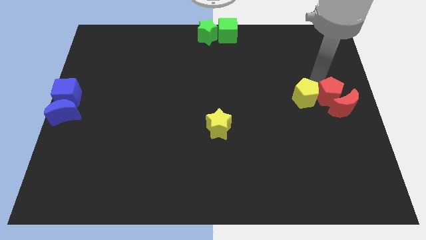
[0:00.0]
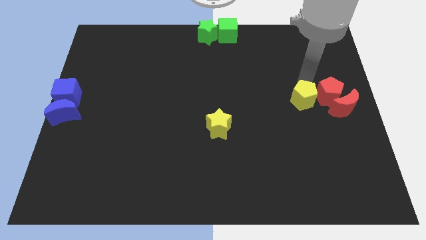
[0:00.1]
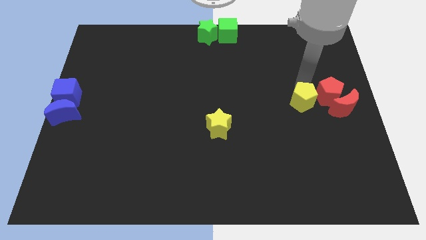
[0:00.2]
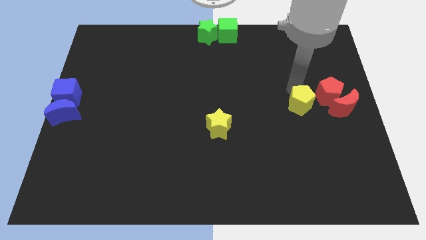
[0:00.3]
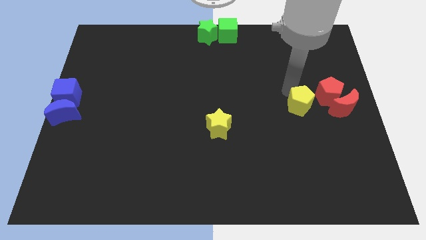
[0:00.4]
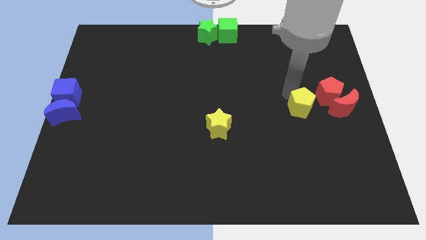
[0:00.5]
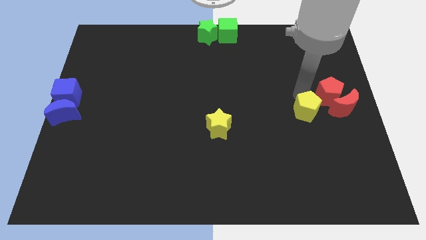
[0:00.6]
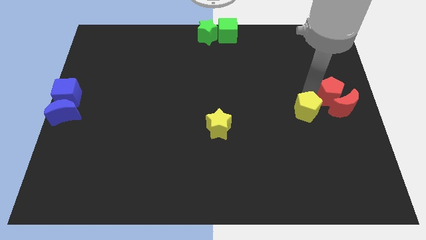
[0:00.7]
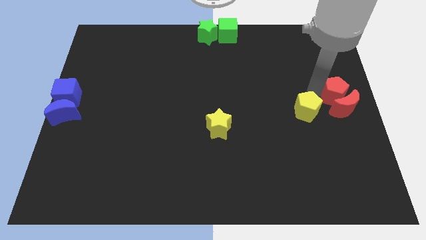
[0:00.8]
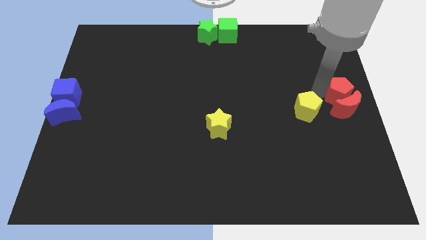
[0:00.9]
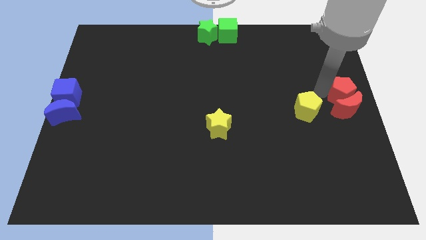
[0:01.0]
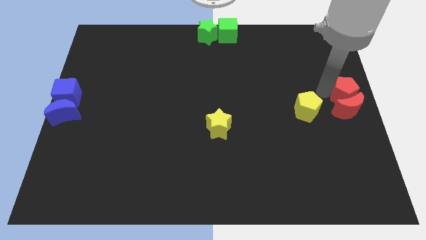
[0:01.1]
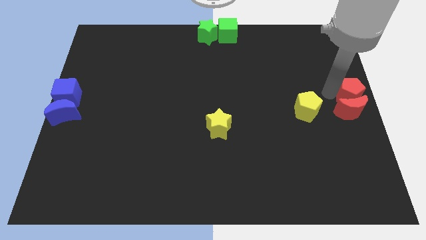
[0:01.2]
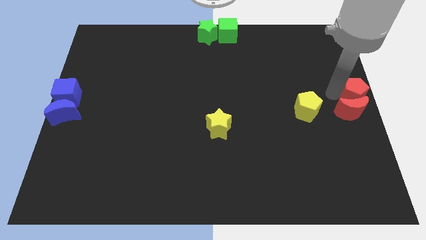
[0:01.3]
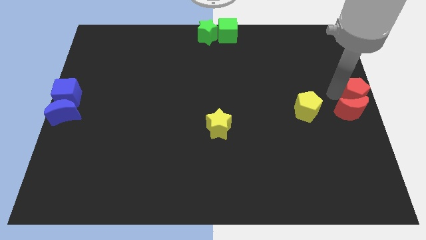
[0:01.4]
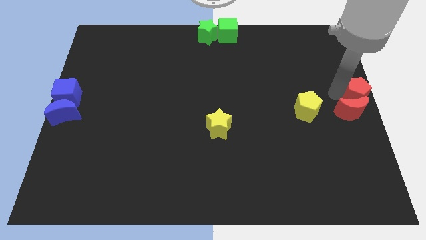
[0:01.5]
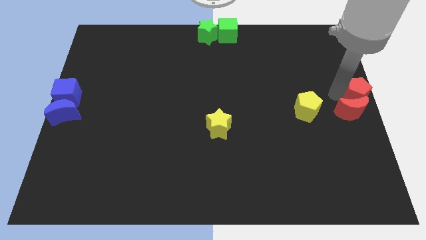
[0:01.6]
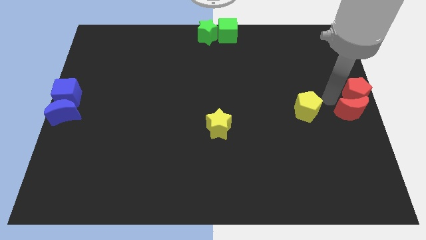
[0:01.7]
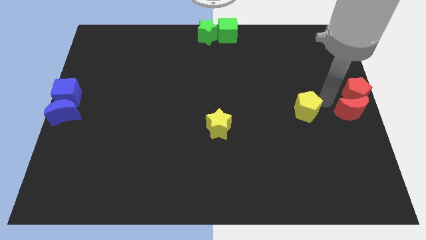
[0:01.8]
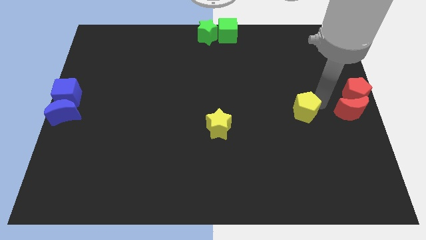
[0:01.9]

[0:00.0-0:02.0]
place yellow pentagon to the right of yellow star

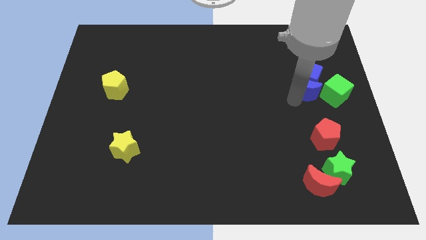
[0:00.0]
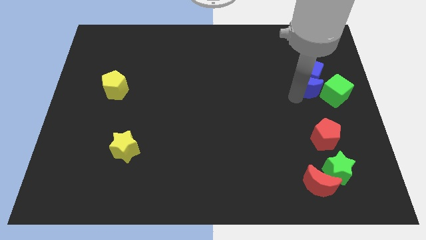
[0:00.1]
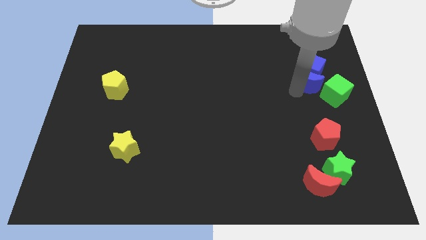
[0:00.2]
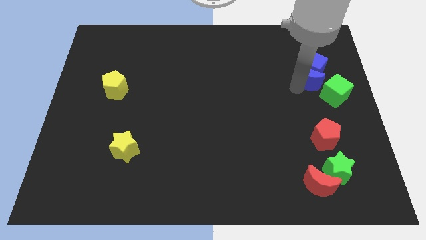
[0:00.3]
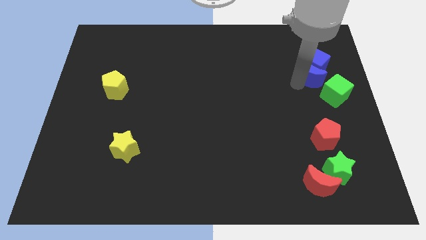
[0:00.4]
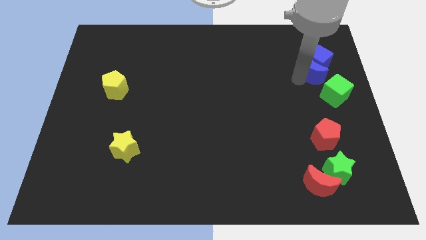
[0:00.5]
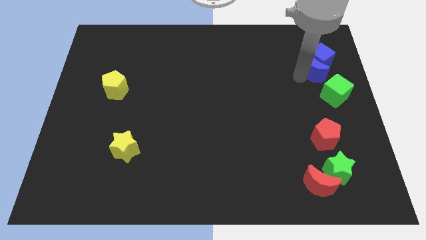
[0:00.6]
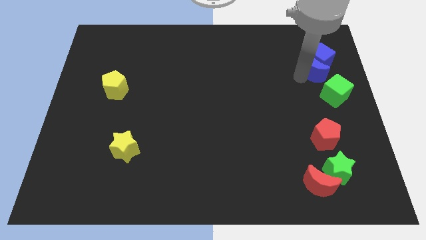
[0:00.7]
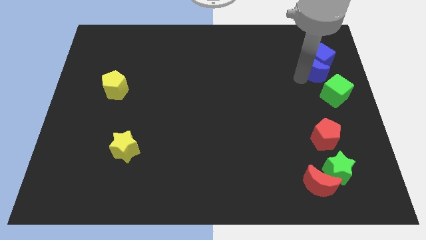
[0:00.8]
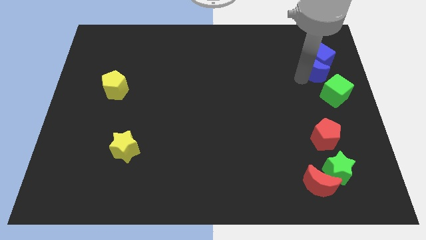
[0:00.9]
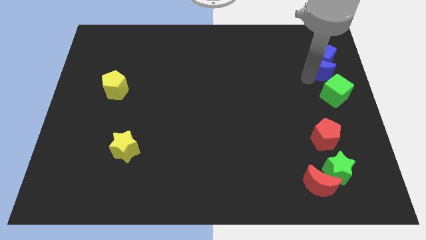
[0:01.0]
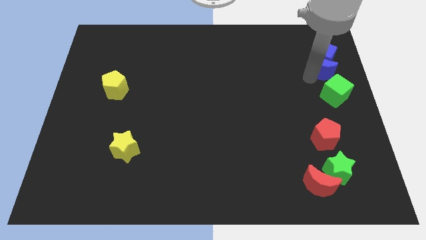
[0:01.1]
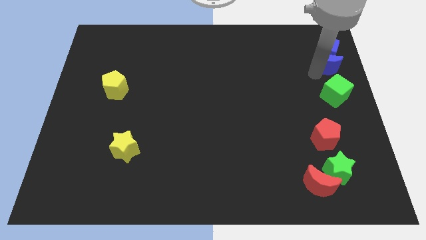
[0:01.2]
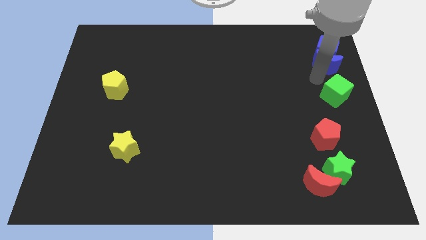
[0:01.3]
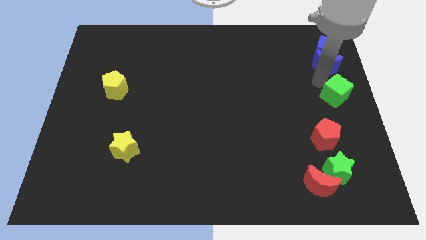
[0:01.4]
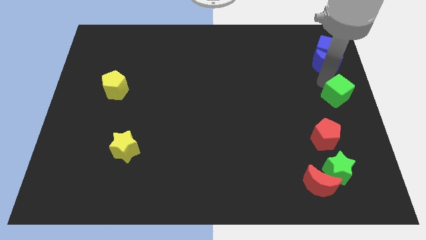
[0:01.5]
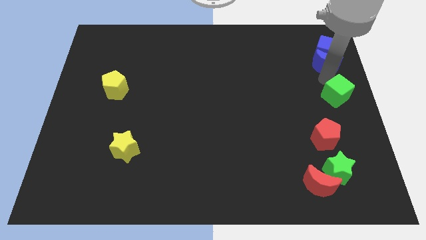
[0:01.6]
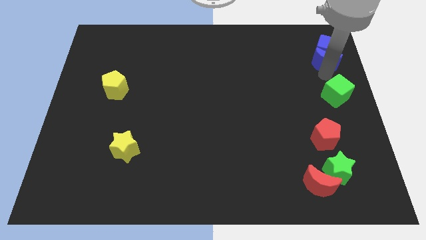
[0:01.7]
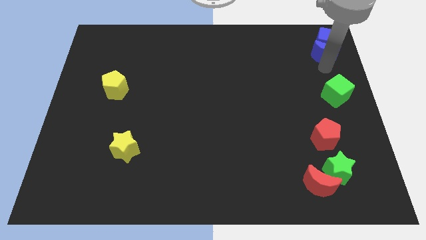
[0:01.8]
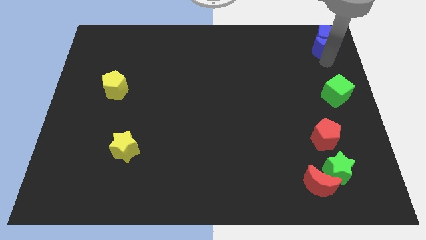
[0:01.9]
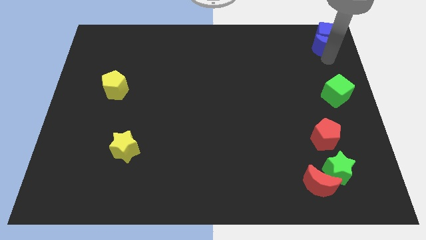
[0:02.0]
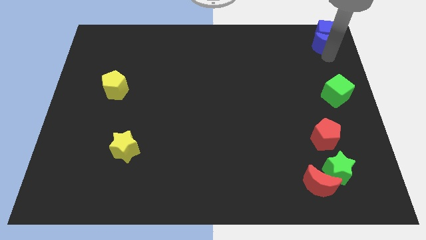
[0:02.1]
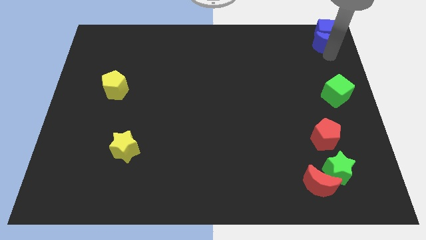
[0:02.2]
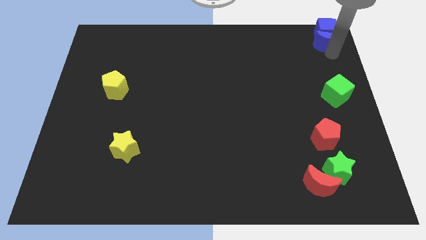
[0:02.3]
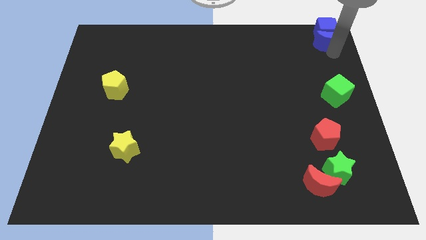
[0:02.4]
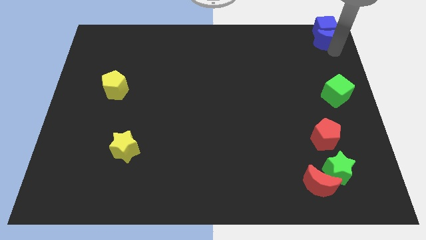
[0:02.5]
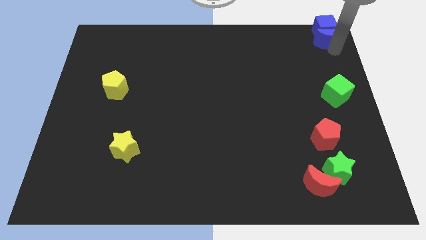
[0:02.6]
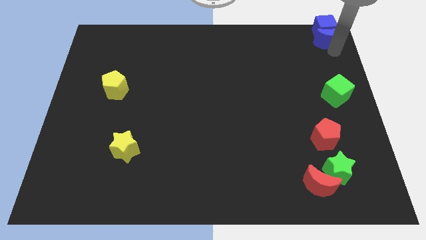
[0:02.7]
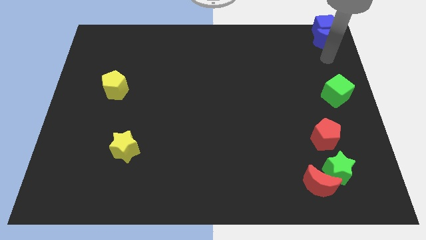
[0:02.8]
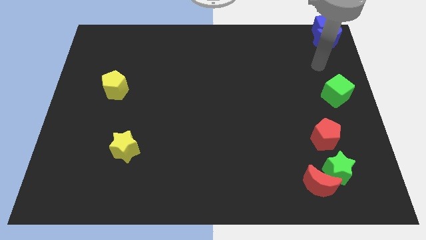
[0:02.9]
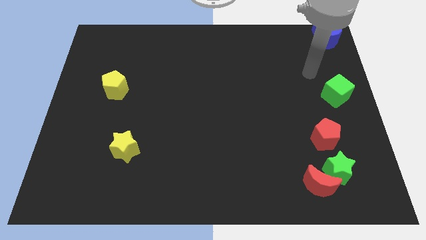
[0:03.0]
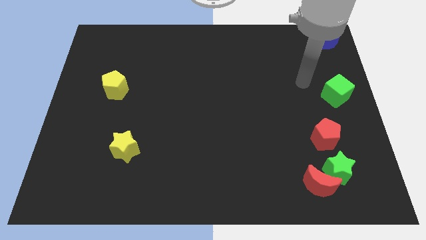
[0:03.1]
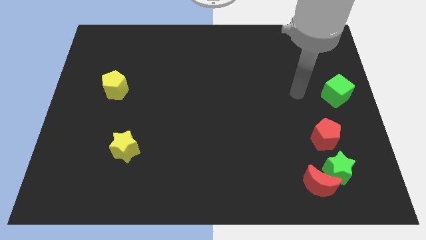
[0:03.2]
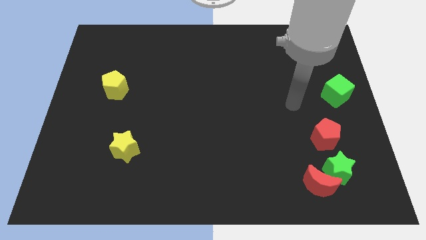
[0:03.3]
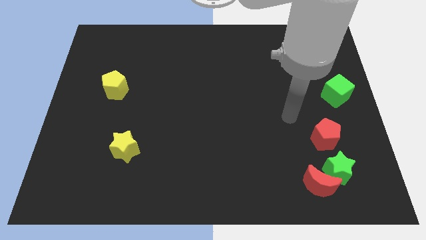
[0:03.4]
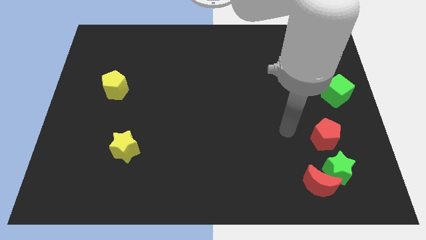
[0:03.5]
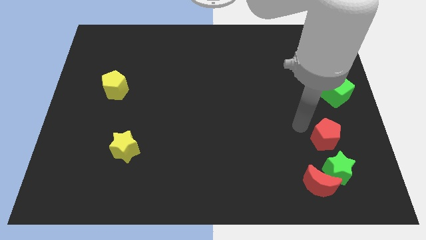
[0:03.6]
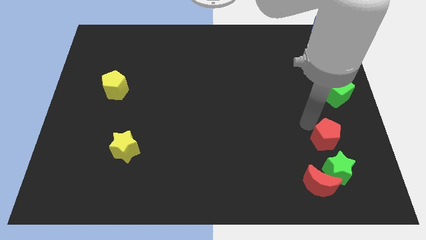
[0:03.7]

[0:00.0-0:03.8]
place blue blocks at top right corner

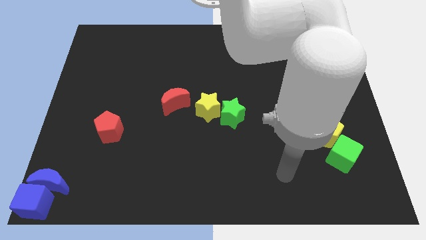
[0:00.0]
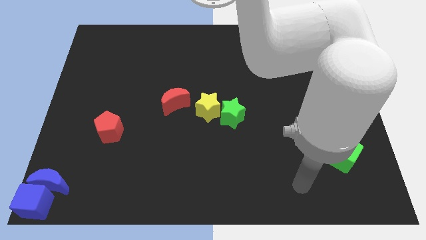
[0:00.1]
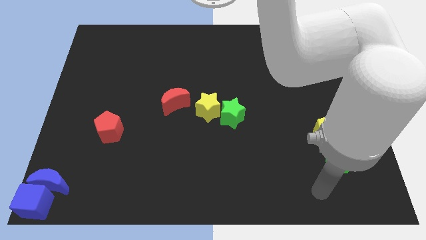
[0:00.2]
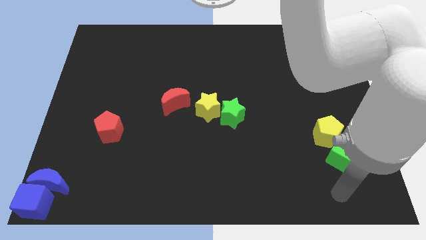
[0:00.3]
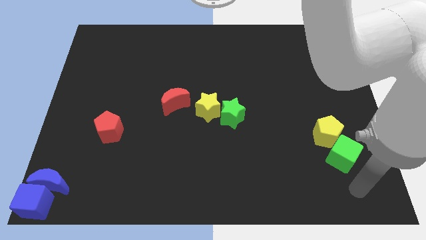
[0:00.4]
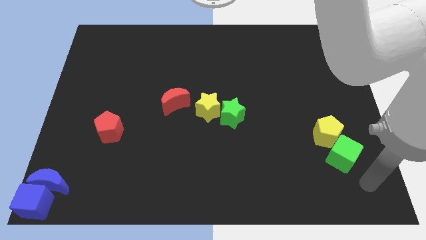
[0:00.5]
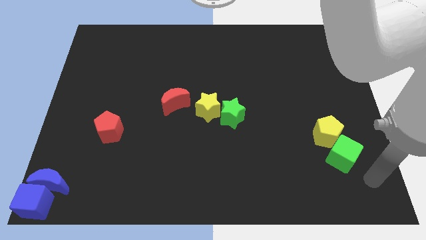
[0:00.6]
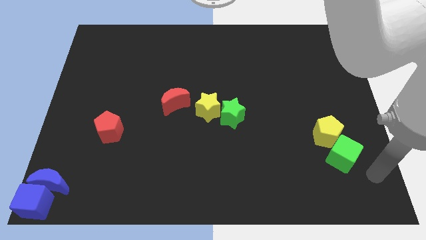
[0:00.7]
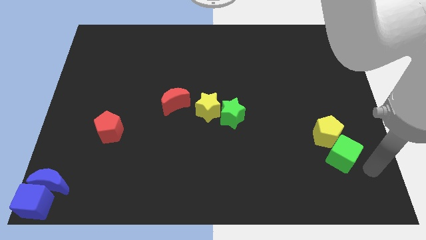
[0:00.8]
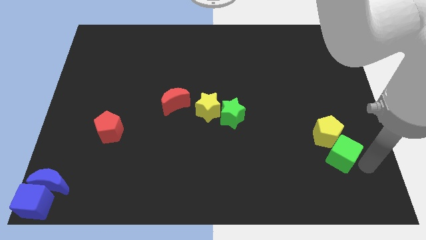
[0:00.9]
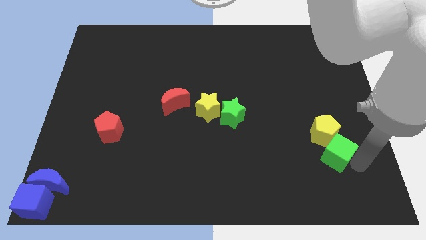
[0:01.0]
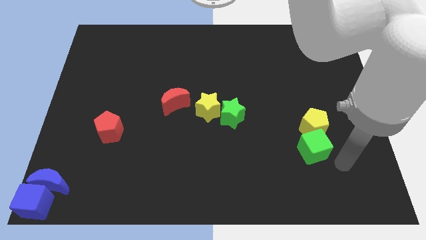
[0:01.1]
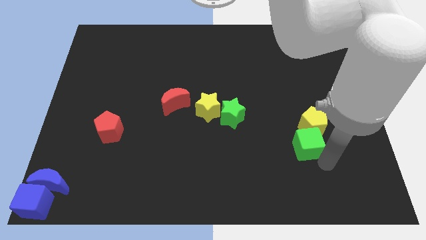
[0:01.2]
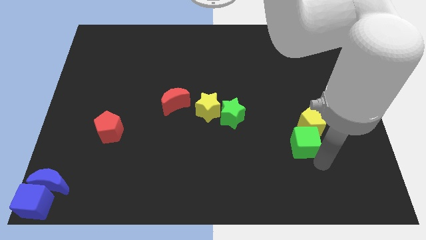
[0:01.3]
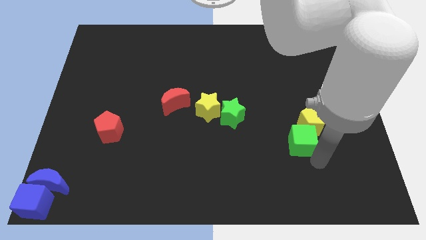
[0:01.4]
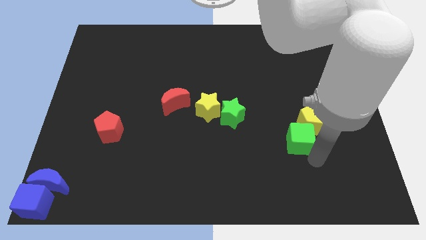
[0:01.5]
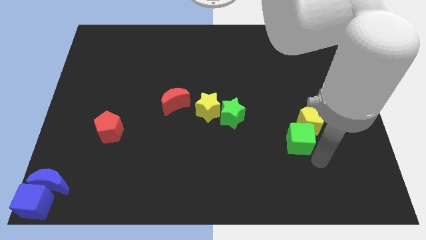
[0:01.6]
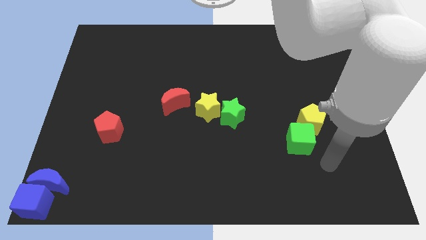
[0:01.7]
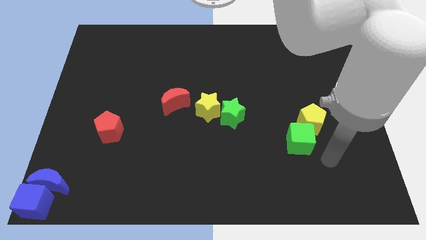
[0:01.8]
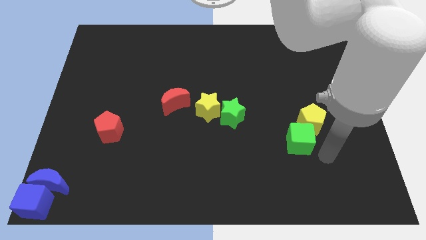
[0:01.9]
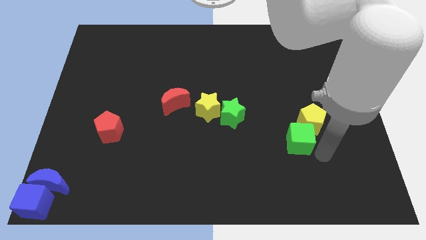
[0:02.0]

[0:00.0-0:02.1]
push the green cube with yellow pentagon towards green star

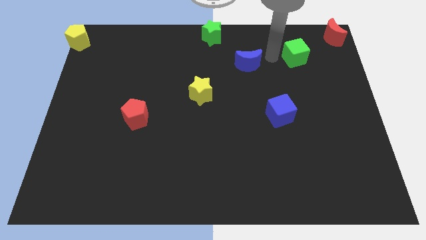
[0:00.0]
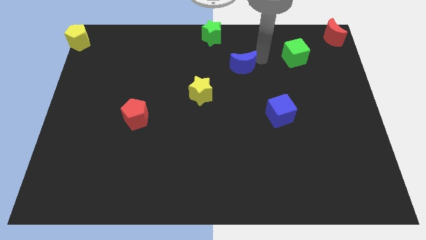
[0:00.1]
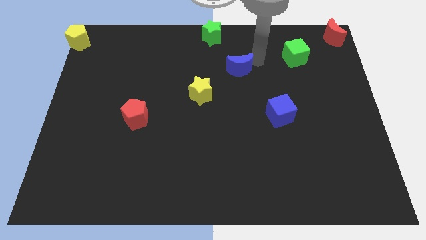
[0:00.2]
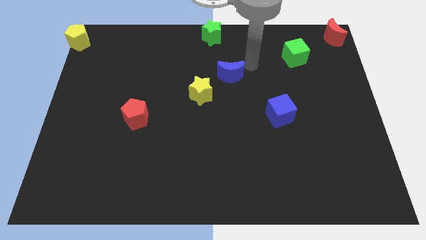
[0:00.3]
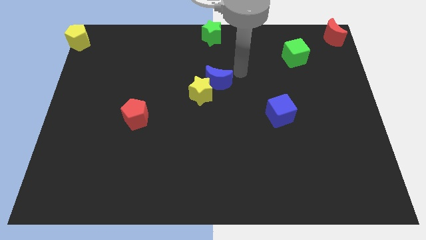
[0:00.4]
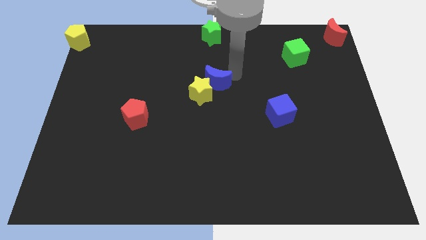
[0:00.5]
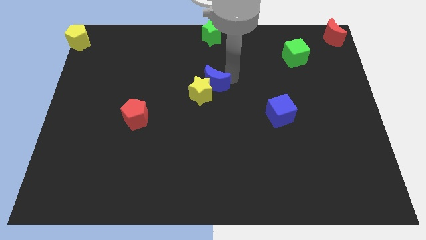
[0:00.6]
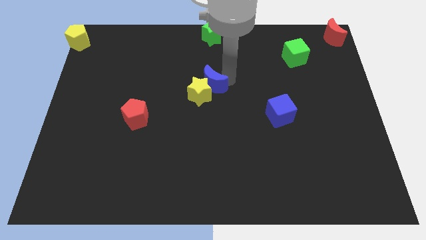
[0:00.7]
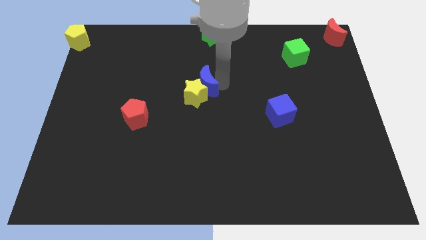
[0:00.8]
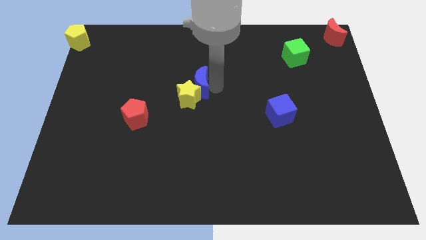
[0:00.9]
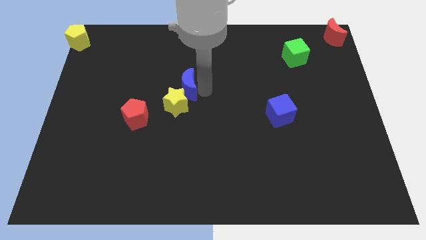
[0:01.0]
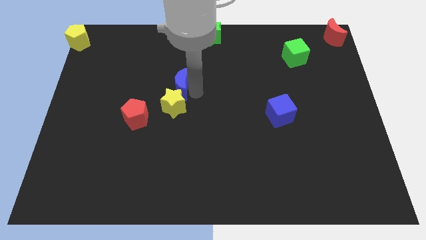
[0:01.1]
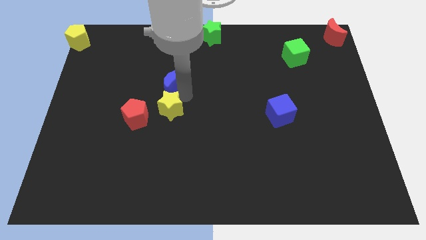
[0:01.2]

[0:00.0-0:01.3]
place blue crescent into the yellow star
